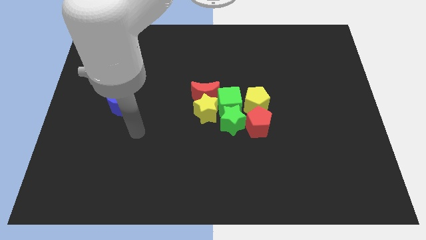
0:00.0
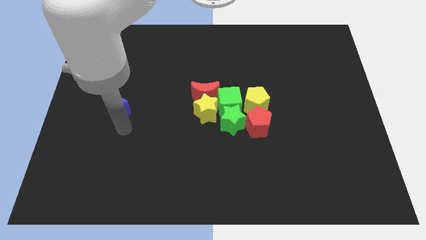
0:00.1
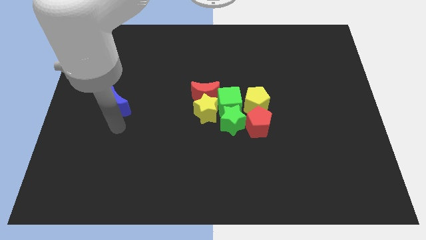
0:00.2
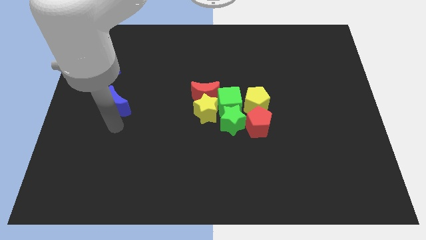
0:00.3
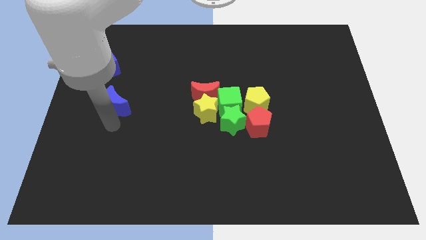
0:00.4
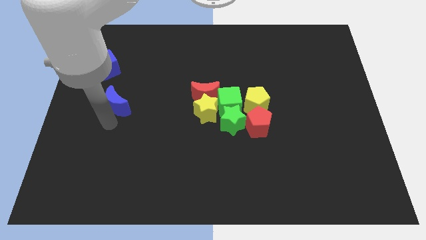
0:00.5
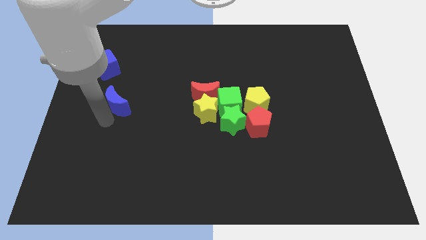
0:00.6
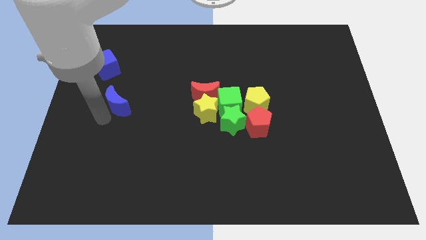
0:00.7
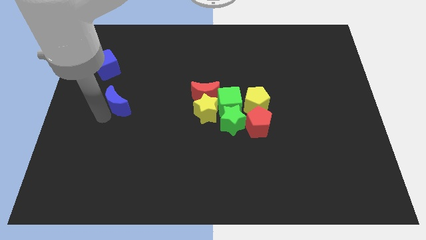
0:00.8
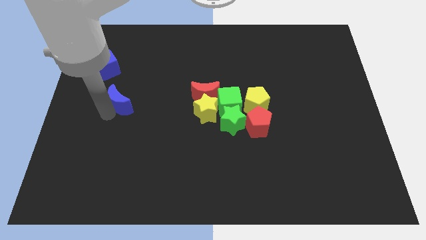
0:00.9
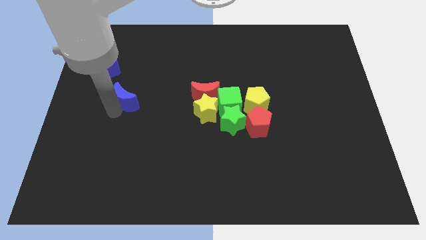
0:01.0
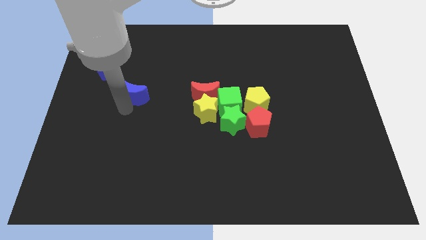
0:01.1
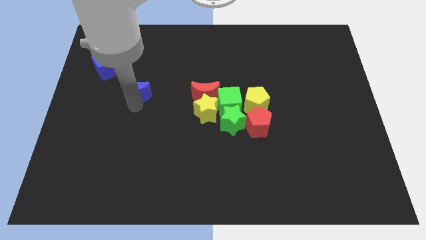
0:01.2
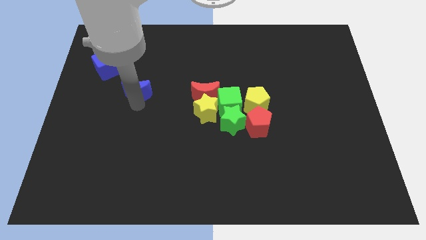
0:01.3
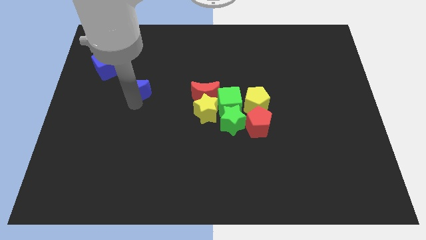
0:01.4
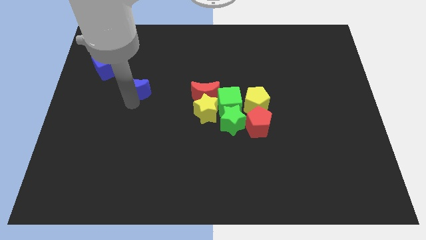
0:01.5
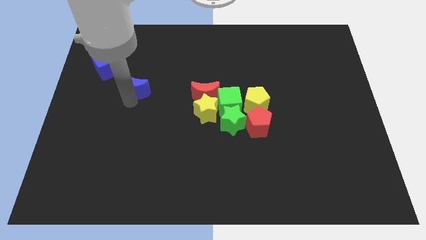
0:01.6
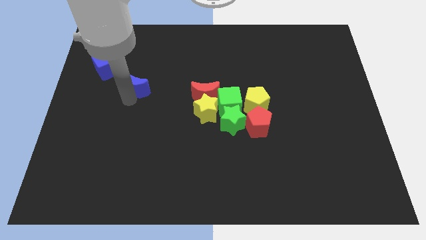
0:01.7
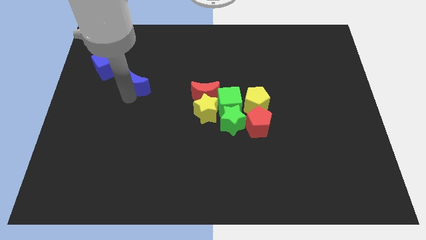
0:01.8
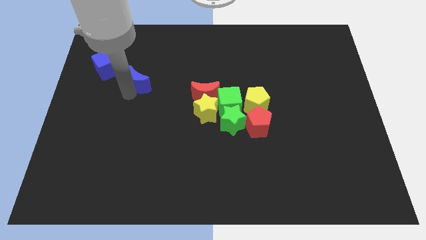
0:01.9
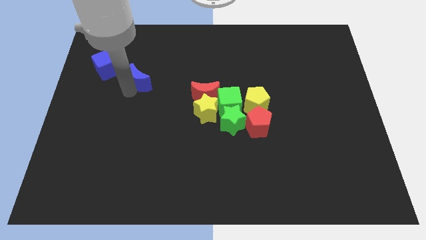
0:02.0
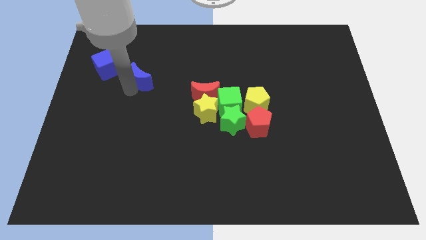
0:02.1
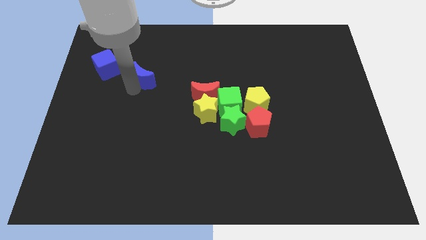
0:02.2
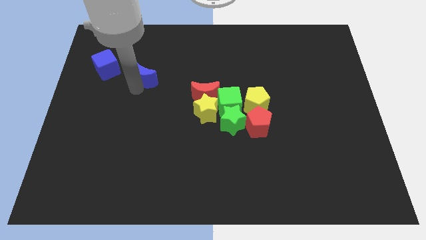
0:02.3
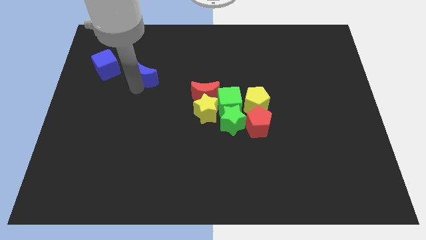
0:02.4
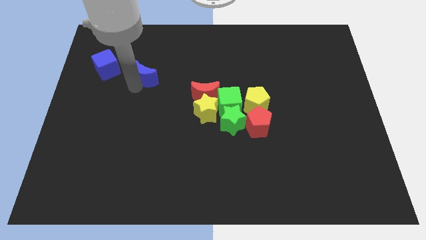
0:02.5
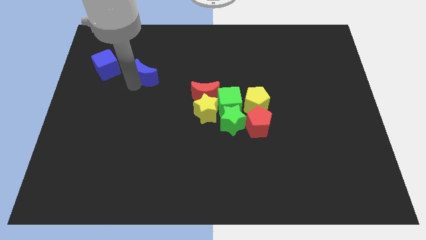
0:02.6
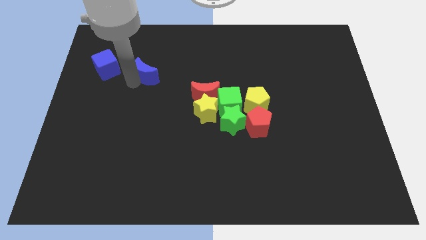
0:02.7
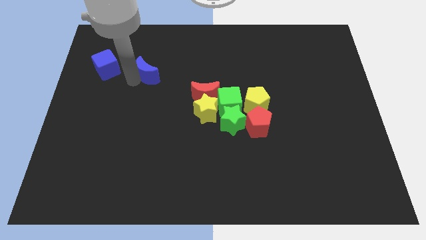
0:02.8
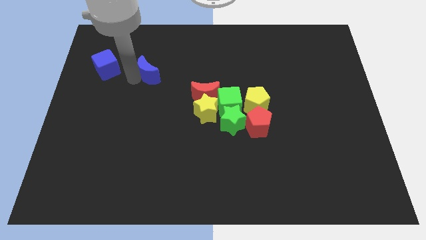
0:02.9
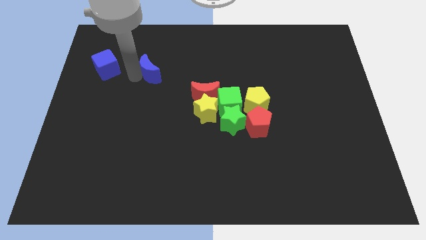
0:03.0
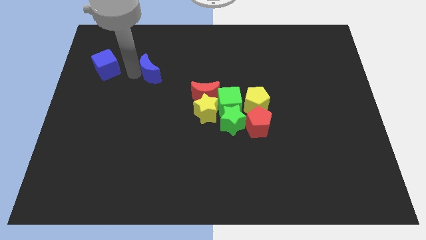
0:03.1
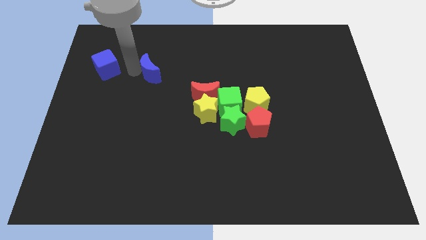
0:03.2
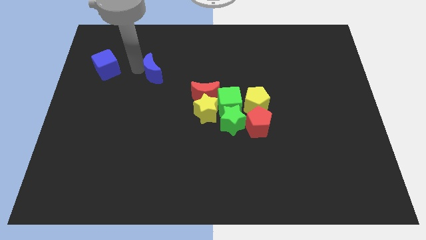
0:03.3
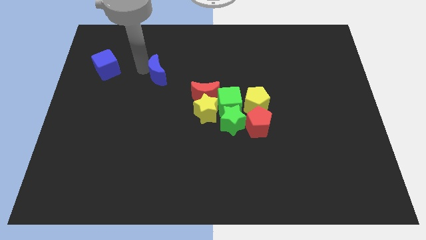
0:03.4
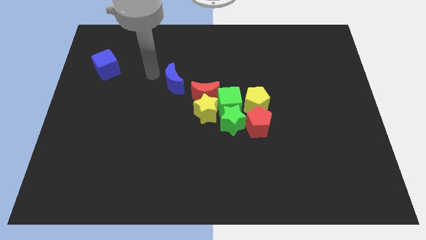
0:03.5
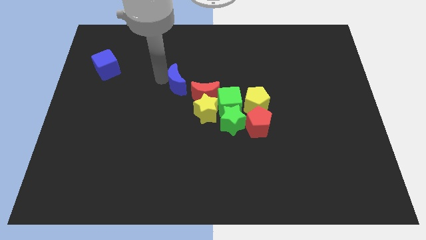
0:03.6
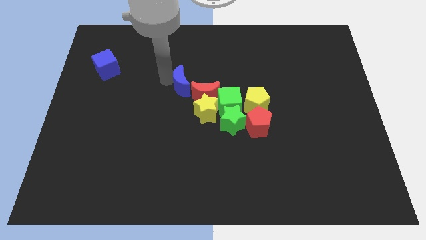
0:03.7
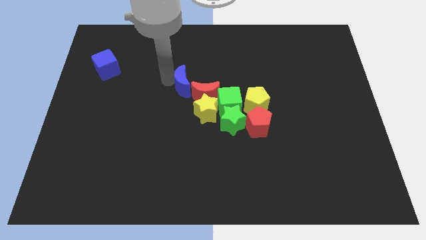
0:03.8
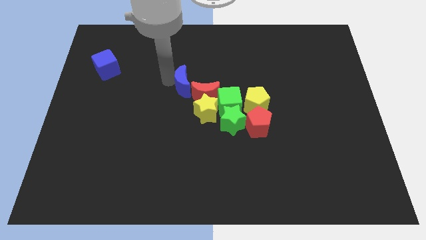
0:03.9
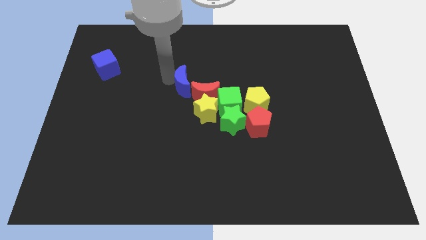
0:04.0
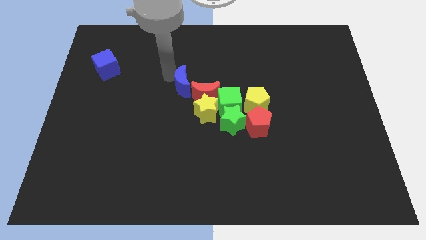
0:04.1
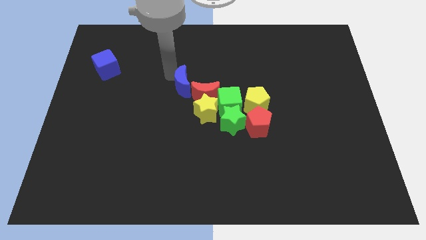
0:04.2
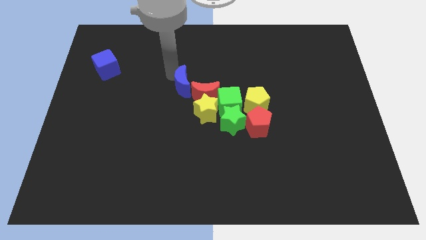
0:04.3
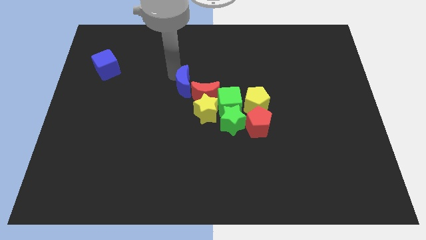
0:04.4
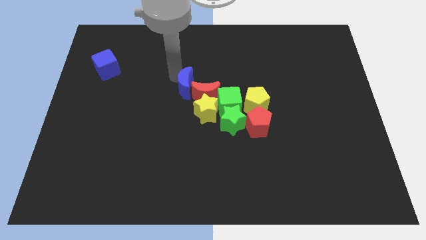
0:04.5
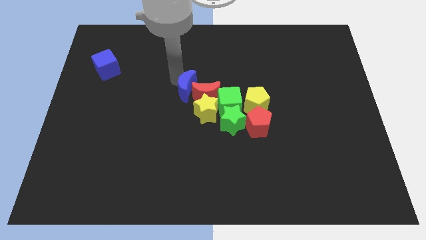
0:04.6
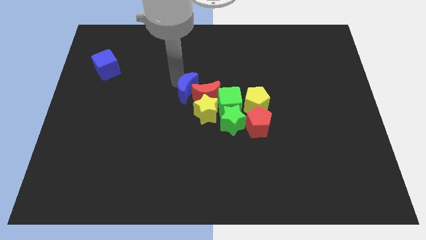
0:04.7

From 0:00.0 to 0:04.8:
push the blue crescent into the red crescent

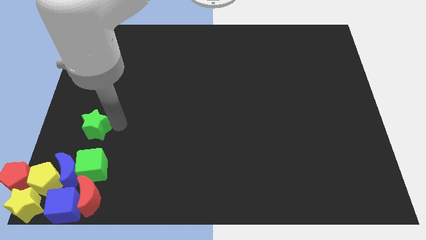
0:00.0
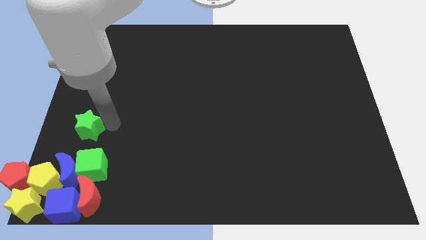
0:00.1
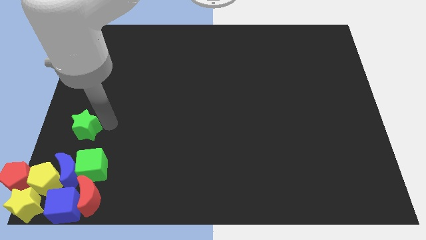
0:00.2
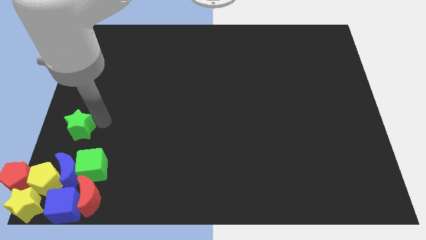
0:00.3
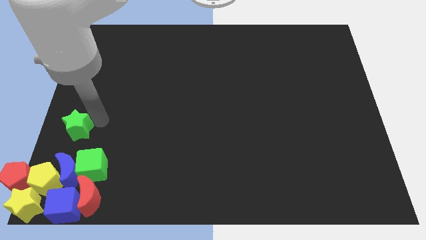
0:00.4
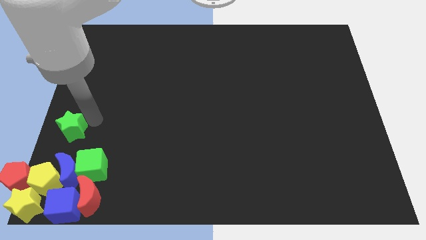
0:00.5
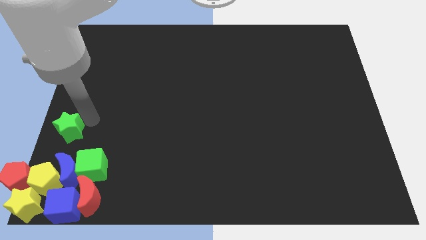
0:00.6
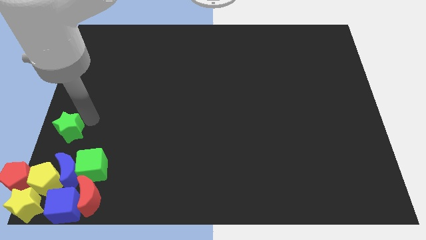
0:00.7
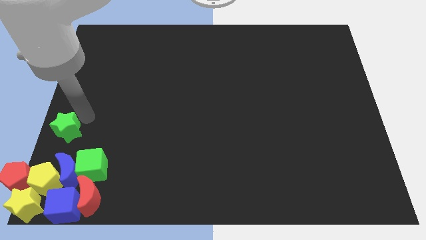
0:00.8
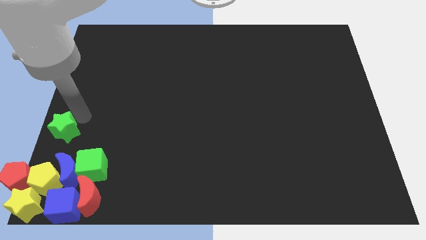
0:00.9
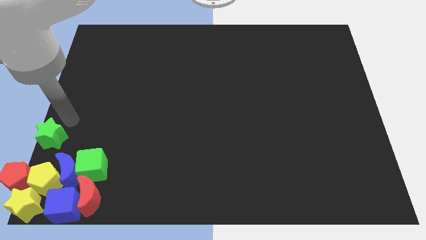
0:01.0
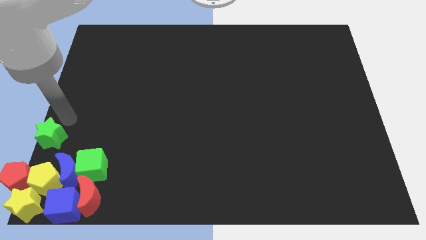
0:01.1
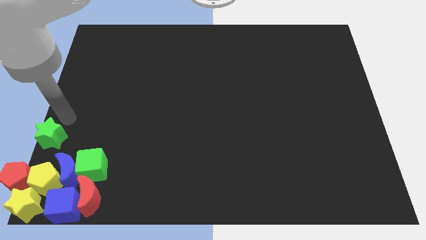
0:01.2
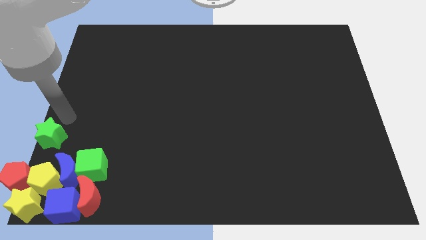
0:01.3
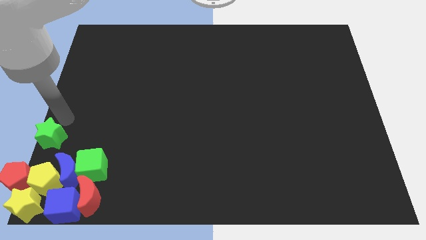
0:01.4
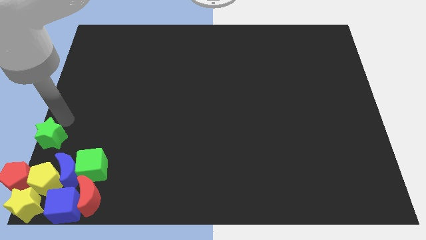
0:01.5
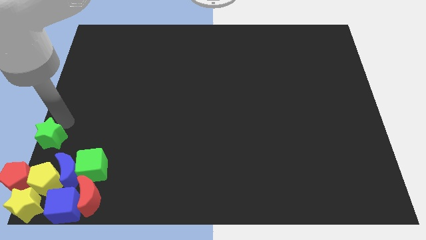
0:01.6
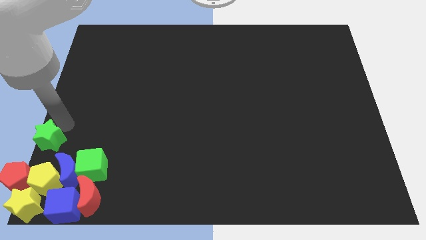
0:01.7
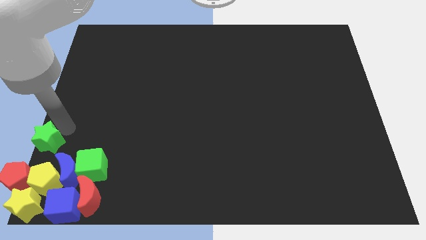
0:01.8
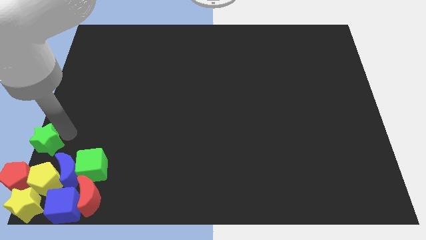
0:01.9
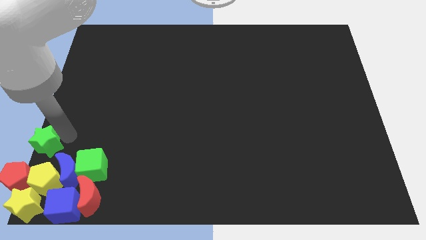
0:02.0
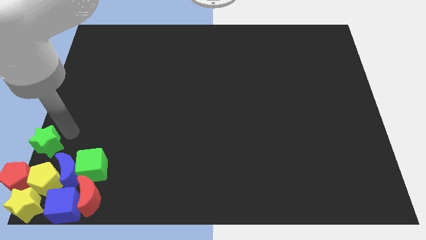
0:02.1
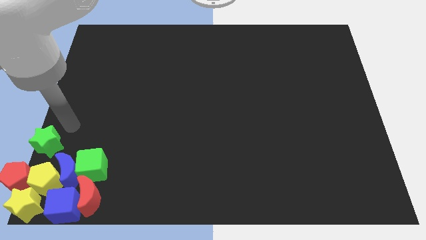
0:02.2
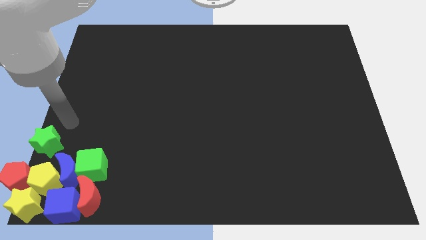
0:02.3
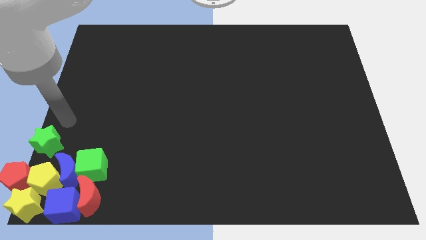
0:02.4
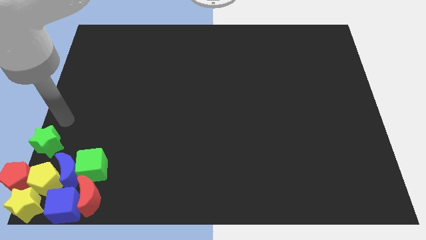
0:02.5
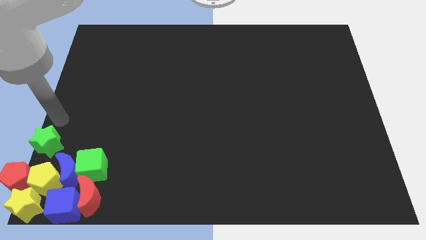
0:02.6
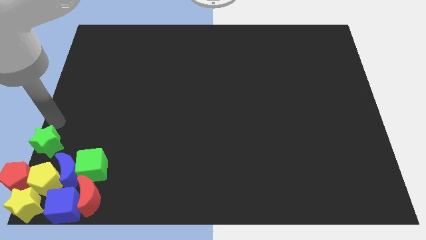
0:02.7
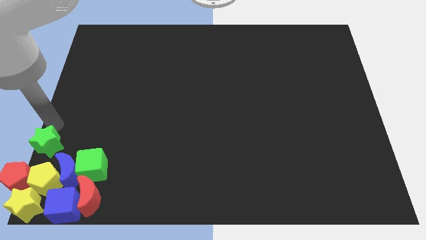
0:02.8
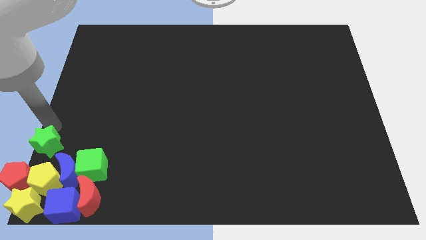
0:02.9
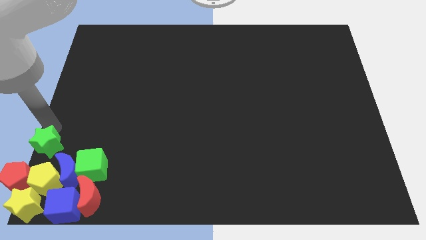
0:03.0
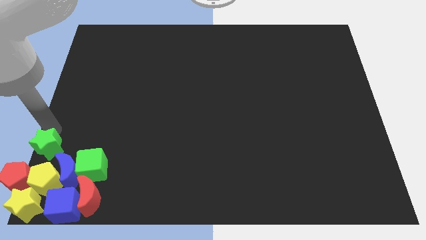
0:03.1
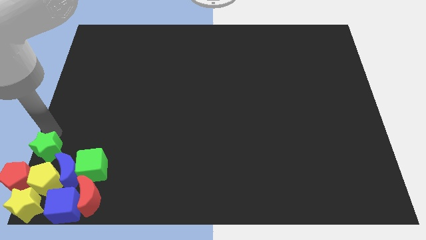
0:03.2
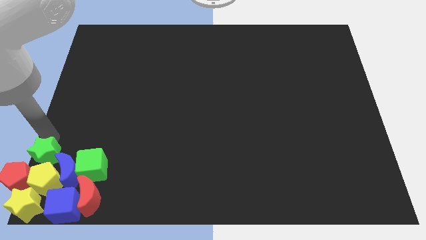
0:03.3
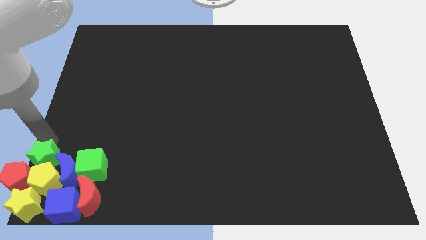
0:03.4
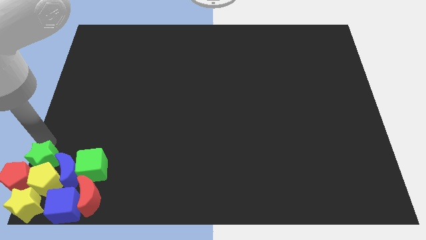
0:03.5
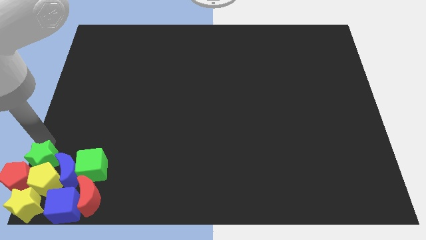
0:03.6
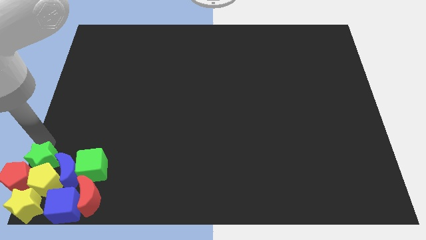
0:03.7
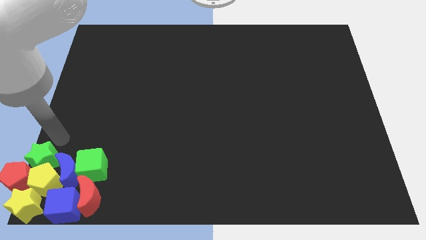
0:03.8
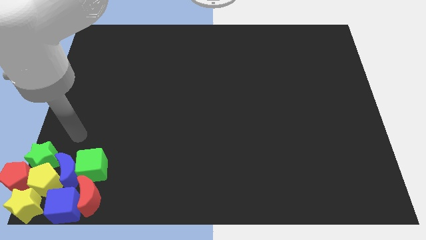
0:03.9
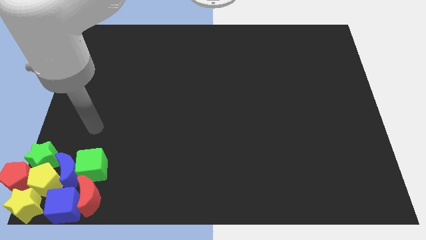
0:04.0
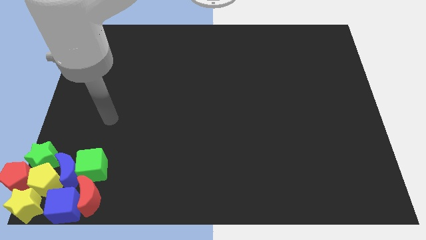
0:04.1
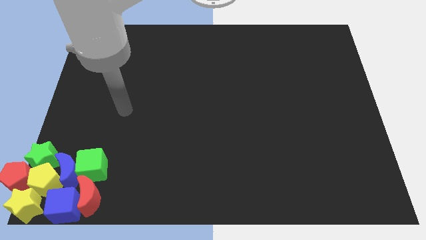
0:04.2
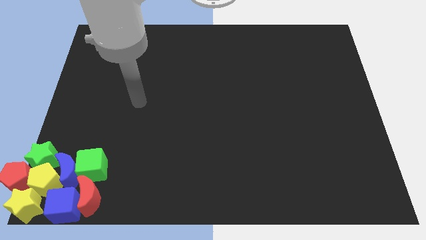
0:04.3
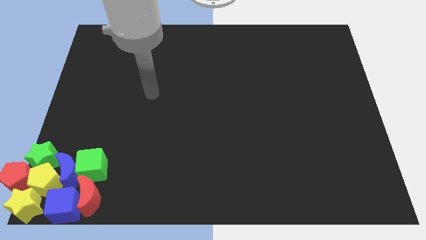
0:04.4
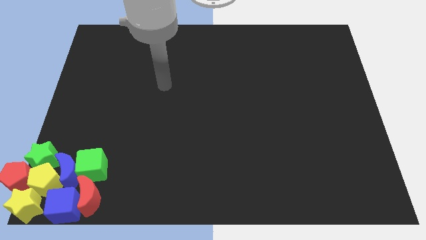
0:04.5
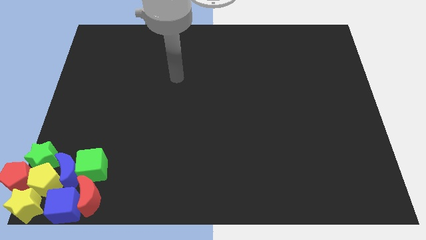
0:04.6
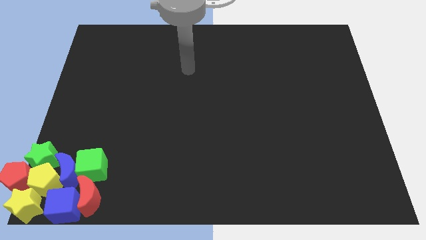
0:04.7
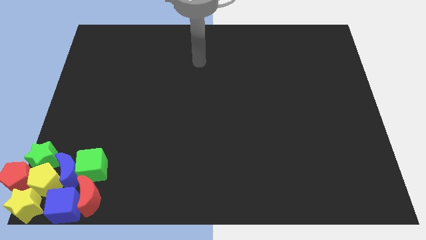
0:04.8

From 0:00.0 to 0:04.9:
move the green star into the group of blocks
